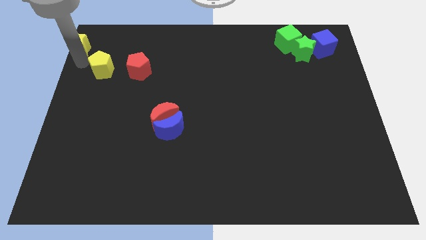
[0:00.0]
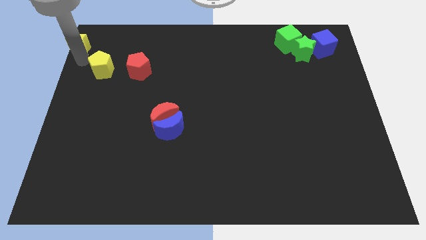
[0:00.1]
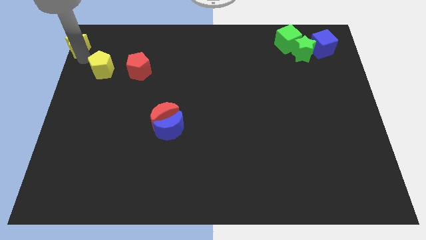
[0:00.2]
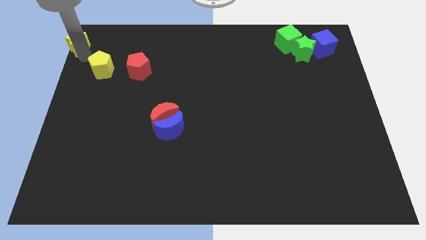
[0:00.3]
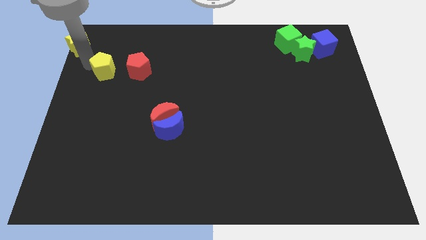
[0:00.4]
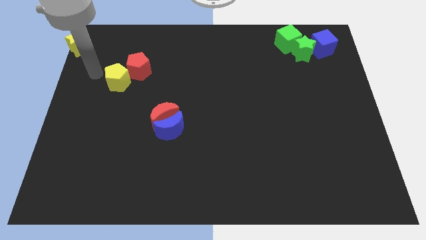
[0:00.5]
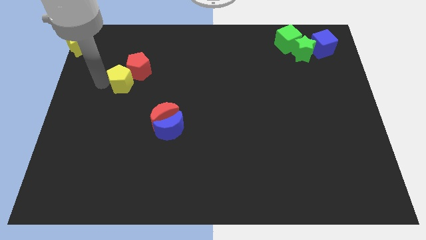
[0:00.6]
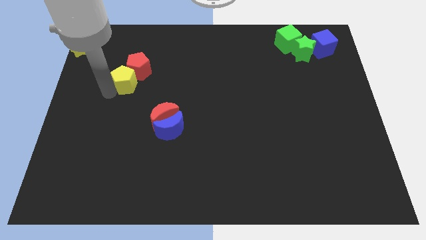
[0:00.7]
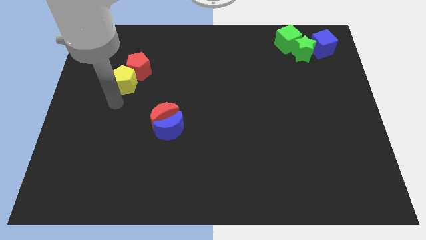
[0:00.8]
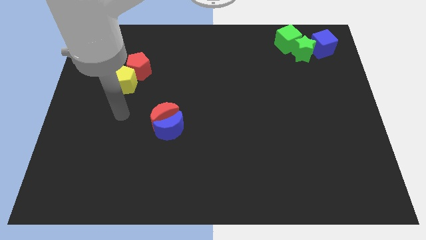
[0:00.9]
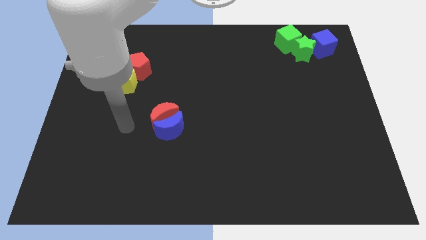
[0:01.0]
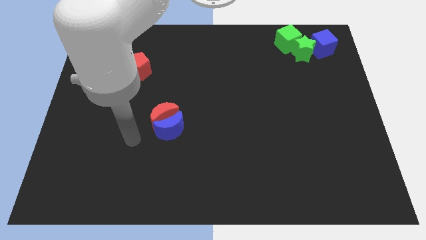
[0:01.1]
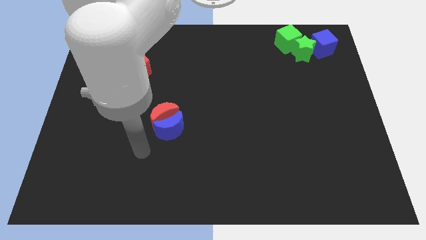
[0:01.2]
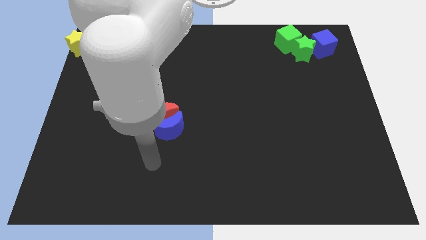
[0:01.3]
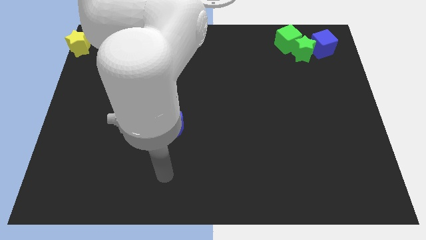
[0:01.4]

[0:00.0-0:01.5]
move the arm below the red and blue crescent

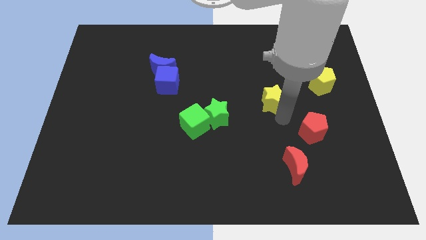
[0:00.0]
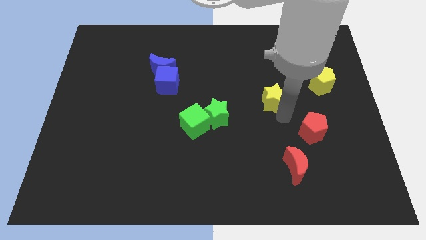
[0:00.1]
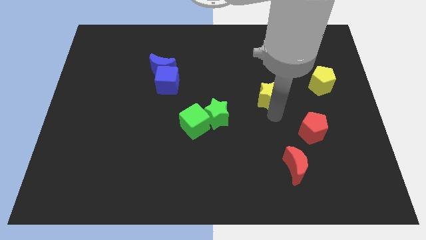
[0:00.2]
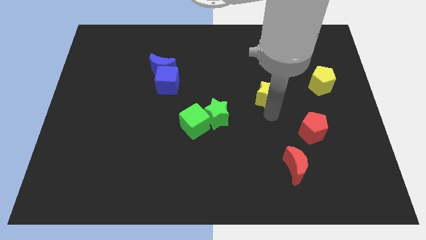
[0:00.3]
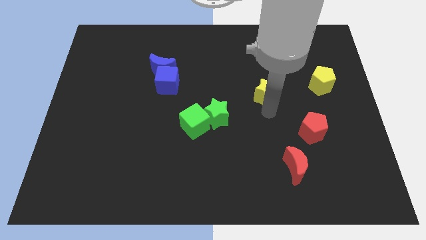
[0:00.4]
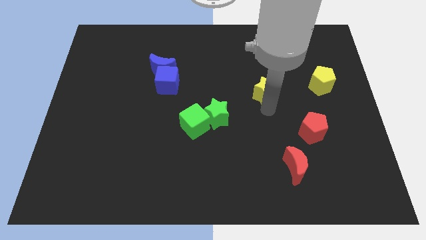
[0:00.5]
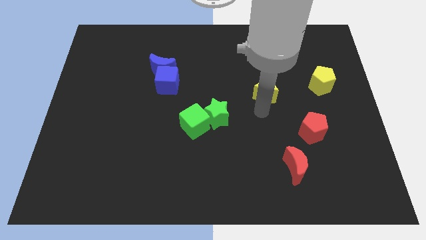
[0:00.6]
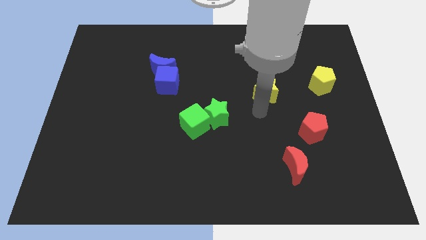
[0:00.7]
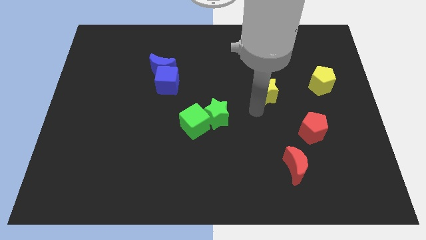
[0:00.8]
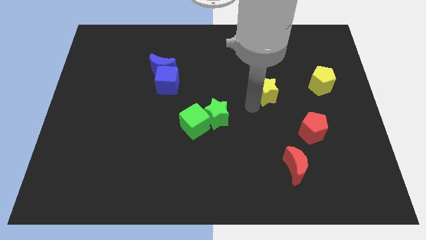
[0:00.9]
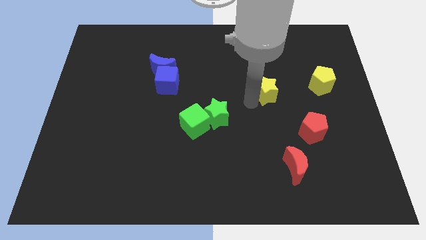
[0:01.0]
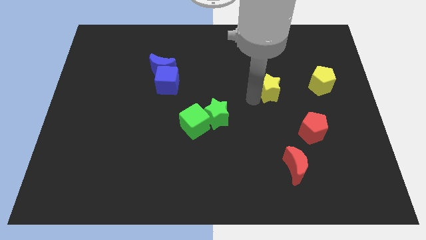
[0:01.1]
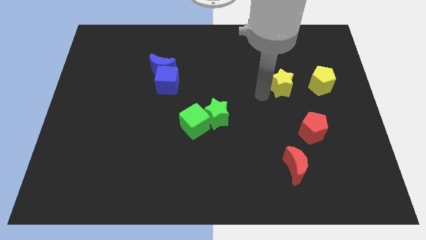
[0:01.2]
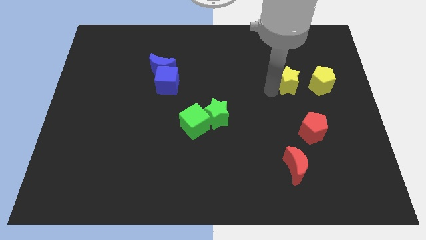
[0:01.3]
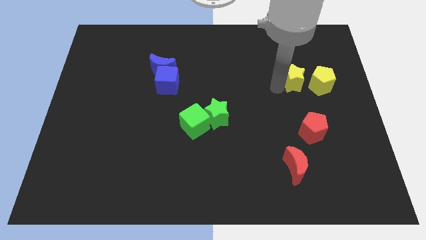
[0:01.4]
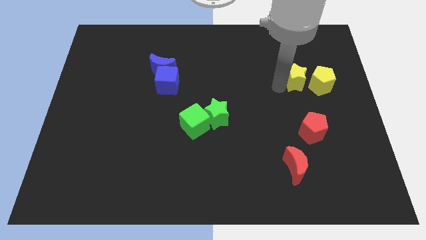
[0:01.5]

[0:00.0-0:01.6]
place the yellow star close to the yellow pentagon

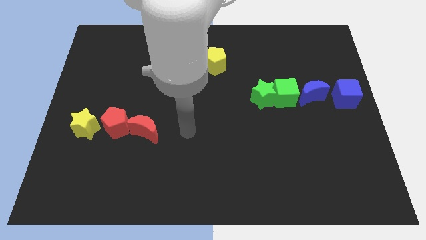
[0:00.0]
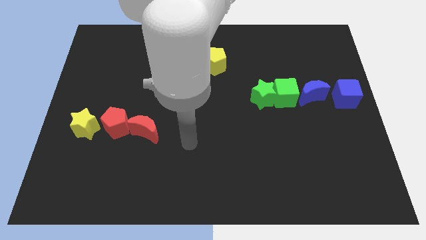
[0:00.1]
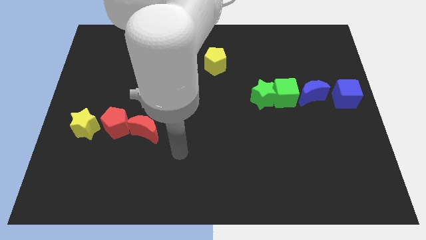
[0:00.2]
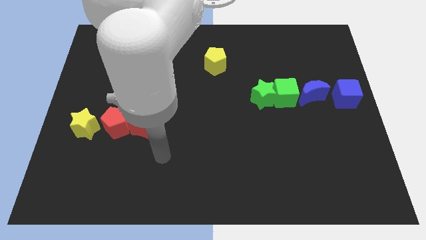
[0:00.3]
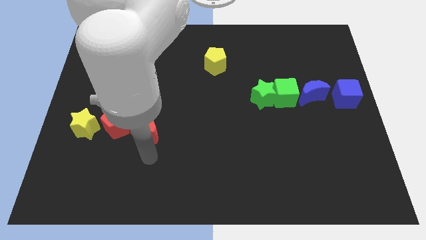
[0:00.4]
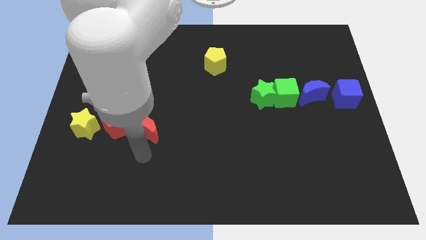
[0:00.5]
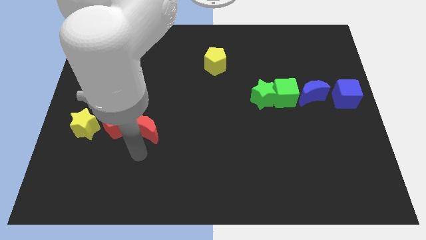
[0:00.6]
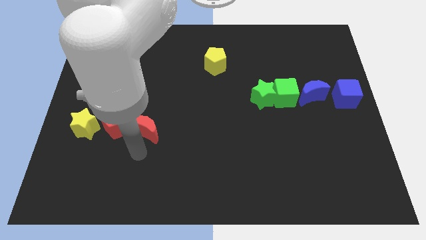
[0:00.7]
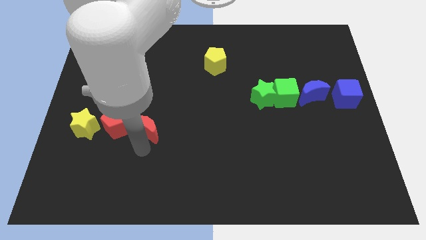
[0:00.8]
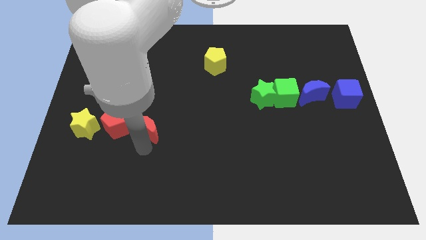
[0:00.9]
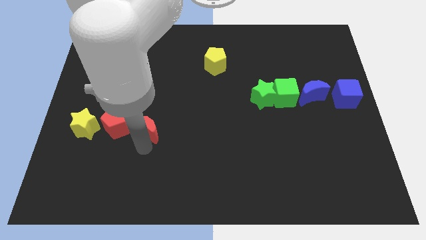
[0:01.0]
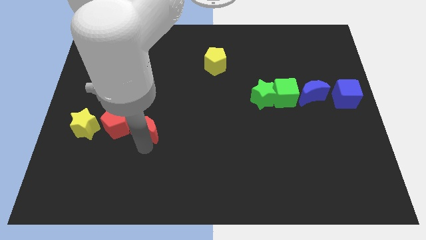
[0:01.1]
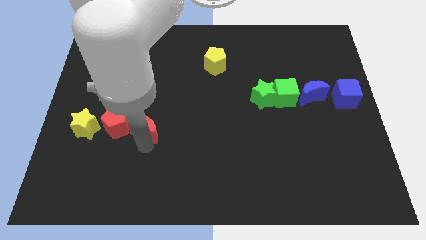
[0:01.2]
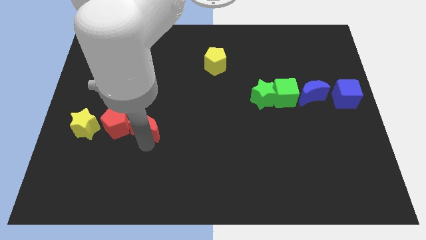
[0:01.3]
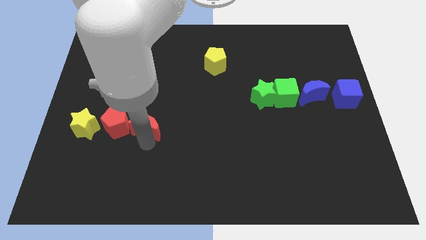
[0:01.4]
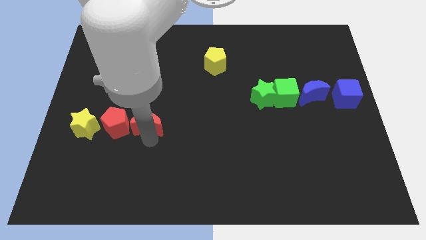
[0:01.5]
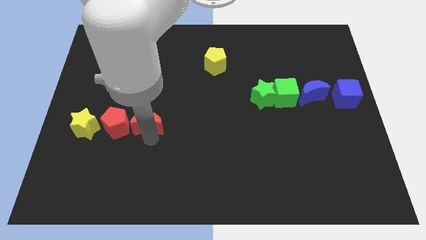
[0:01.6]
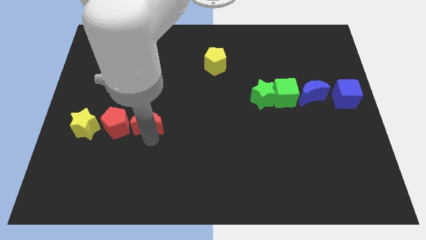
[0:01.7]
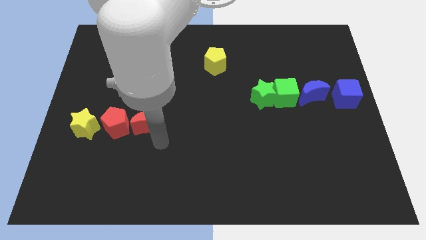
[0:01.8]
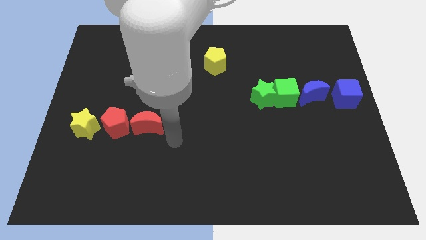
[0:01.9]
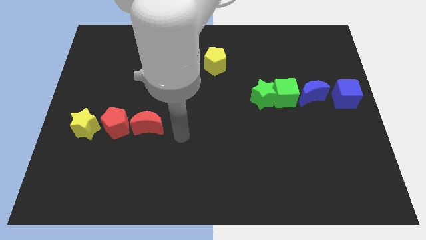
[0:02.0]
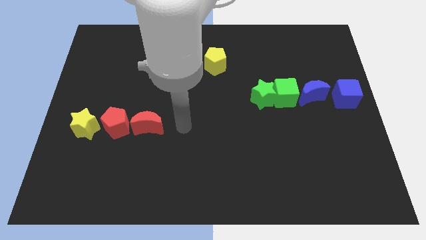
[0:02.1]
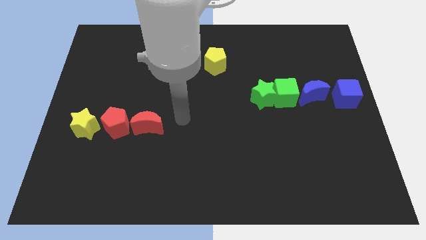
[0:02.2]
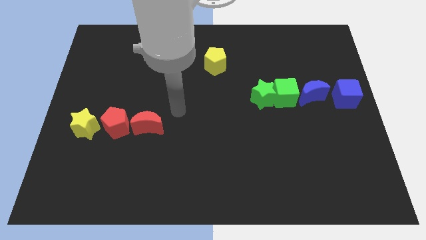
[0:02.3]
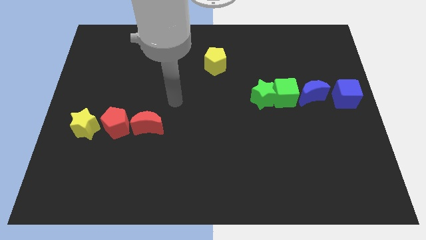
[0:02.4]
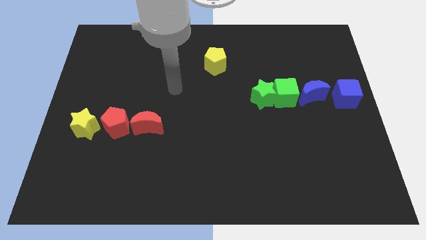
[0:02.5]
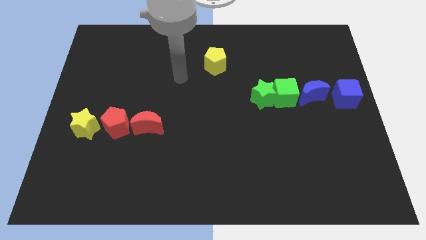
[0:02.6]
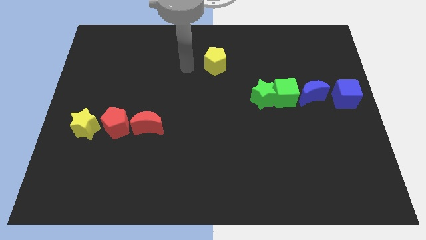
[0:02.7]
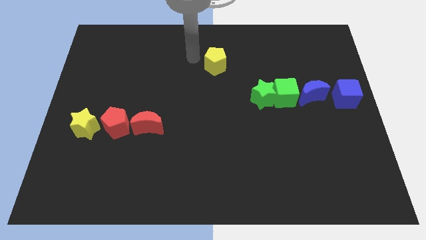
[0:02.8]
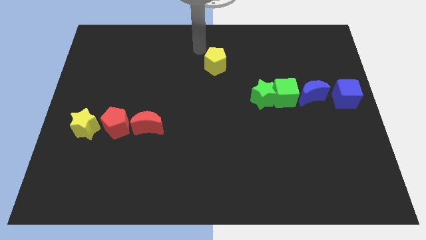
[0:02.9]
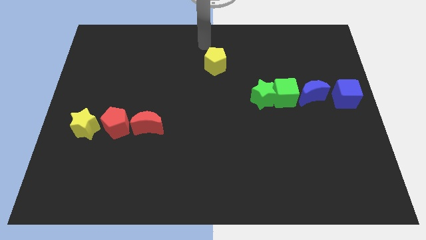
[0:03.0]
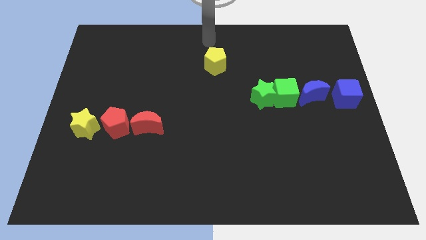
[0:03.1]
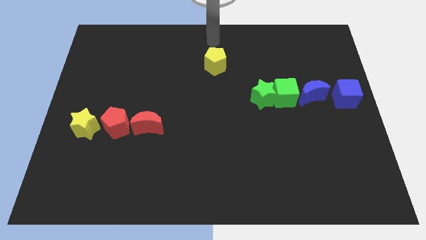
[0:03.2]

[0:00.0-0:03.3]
move red moon slightly up

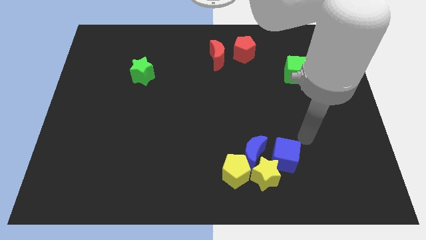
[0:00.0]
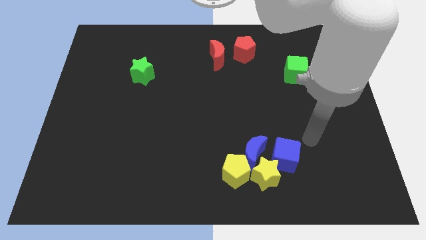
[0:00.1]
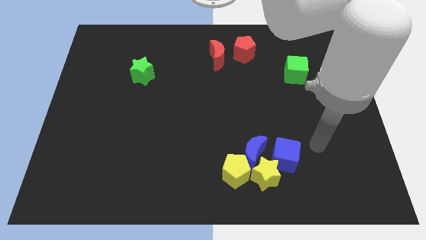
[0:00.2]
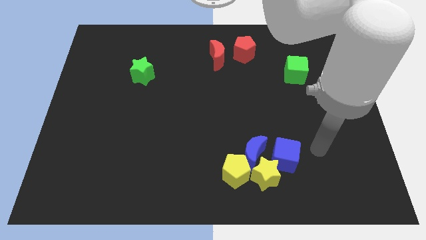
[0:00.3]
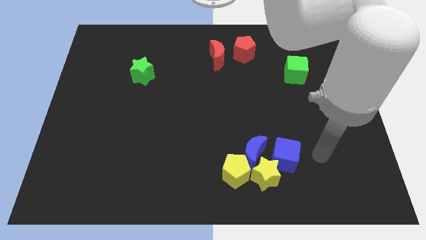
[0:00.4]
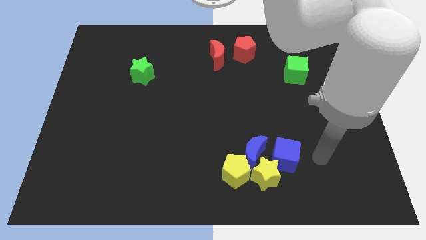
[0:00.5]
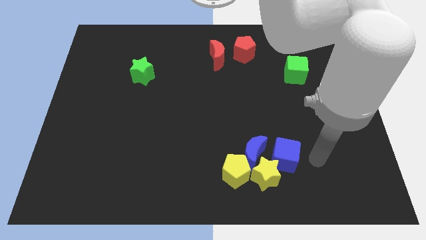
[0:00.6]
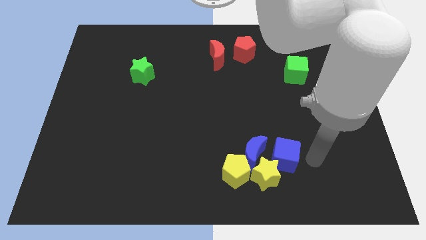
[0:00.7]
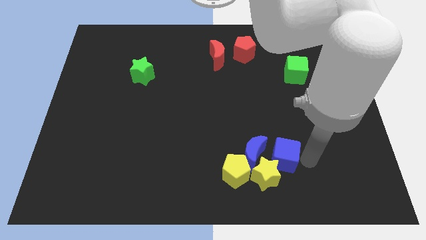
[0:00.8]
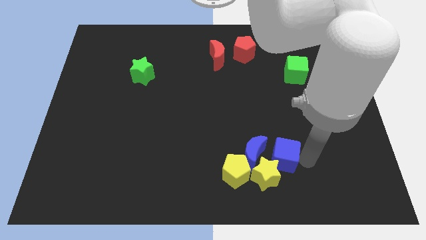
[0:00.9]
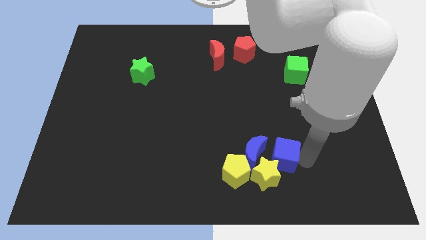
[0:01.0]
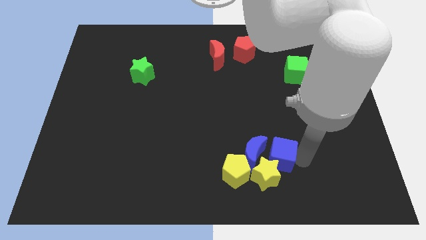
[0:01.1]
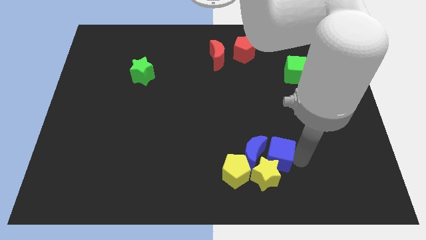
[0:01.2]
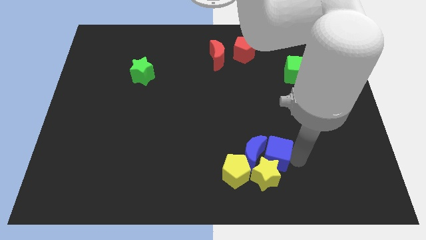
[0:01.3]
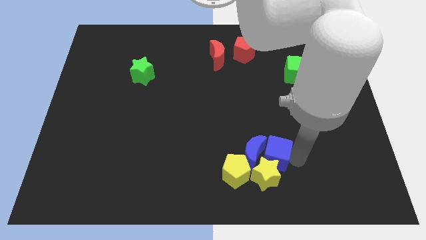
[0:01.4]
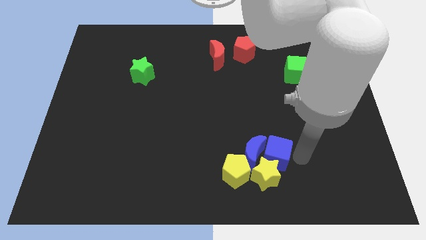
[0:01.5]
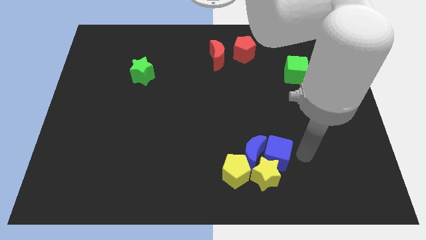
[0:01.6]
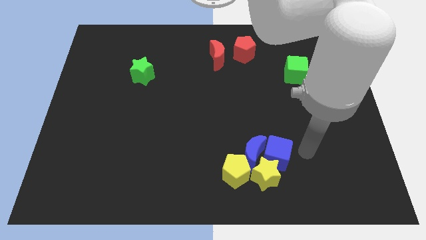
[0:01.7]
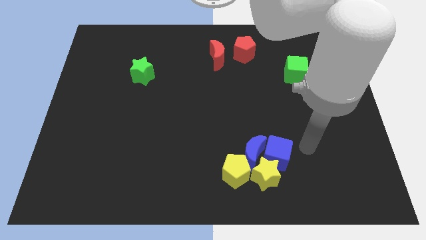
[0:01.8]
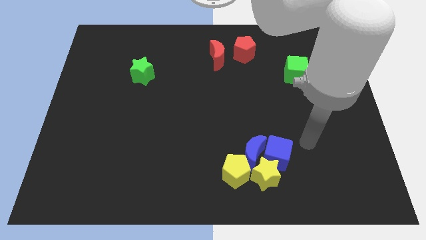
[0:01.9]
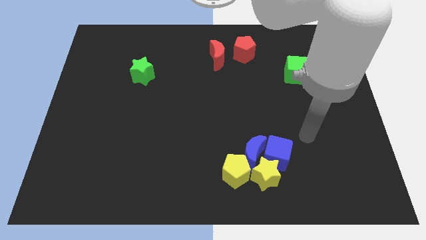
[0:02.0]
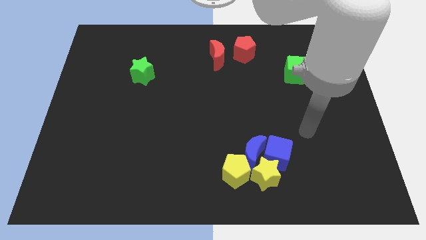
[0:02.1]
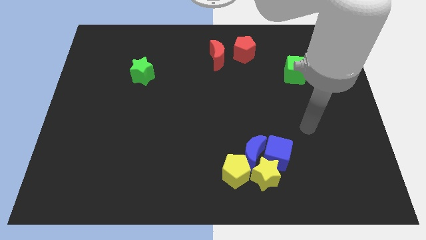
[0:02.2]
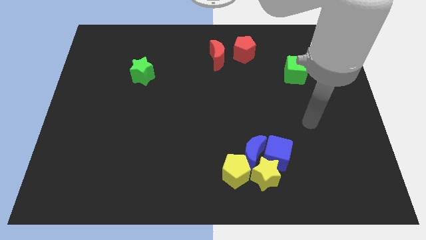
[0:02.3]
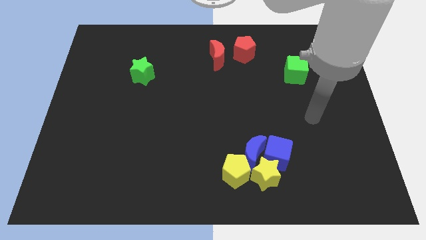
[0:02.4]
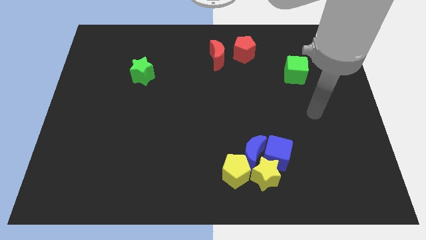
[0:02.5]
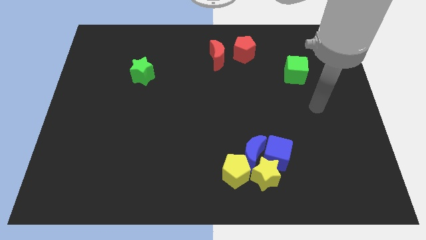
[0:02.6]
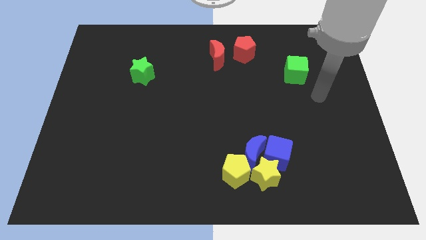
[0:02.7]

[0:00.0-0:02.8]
push the blue cube right to the blue crescent
